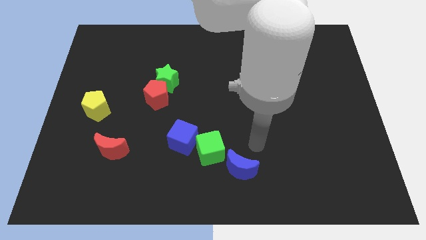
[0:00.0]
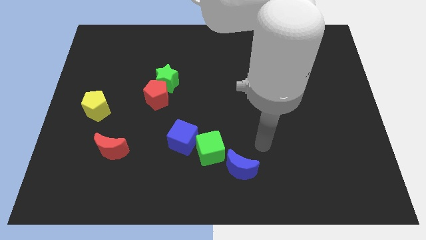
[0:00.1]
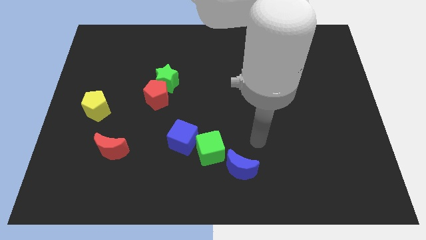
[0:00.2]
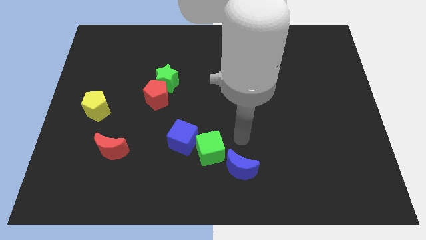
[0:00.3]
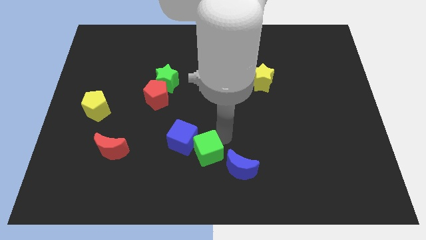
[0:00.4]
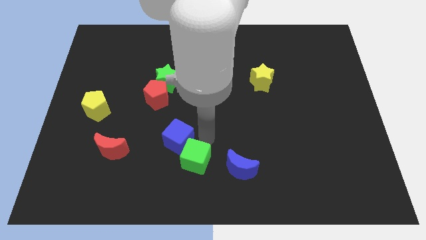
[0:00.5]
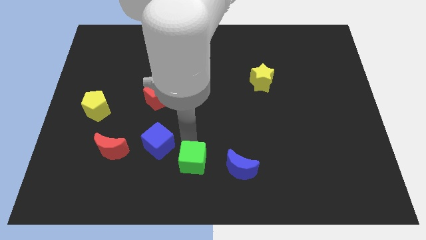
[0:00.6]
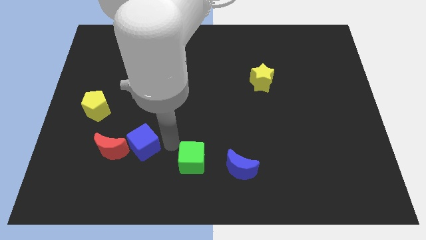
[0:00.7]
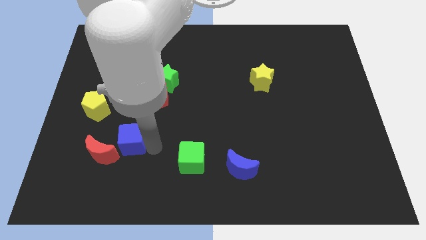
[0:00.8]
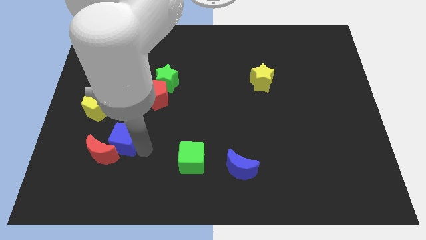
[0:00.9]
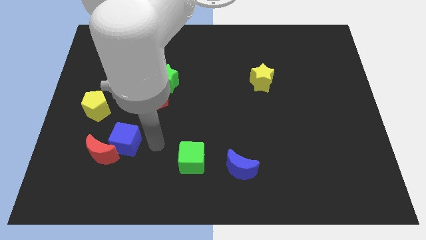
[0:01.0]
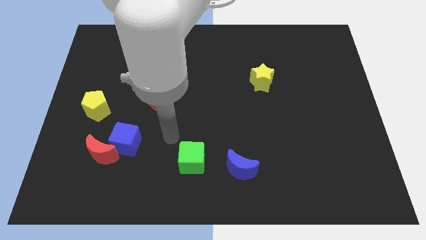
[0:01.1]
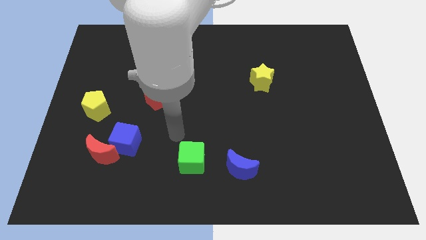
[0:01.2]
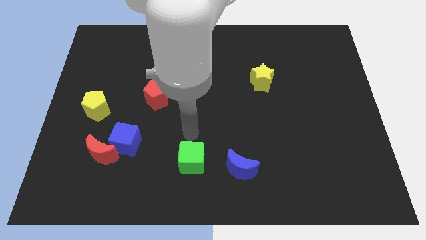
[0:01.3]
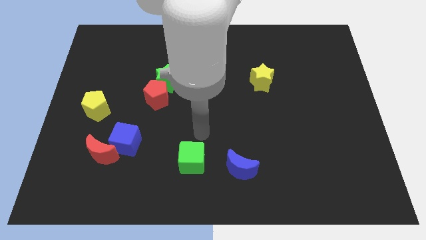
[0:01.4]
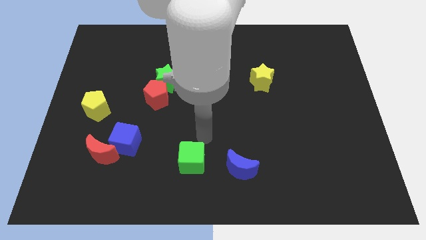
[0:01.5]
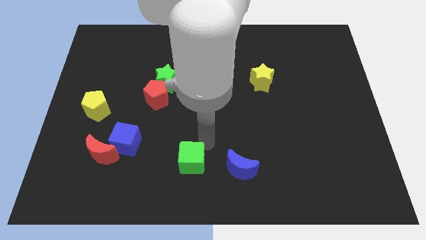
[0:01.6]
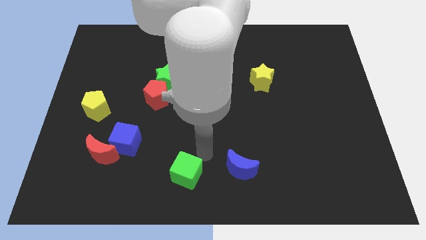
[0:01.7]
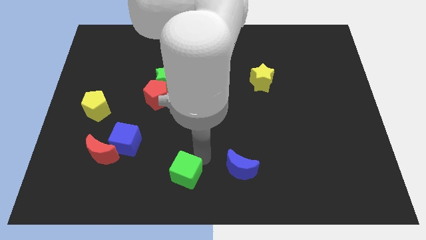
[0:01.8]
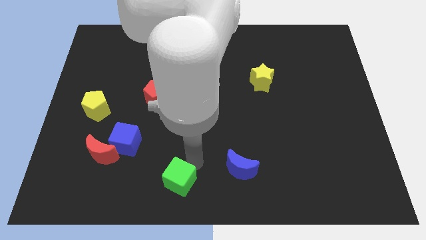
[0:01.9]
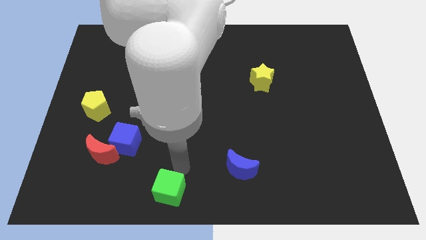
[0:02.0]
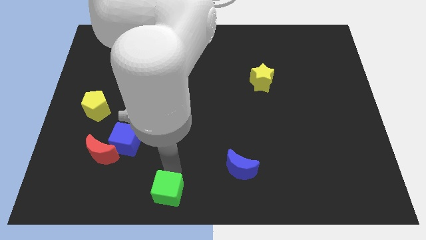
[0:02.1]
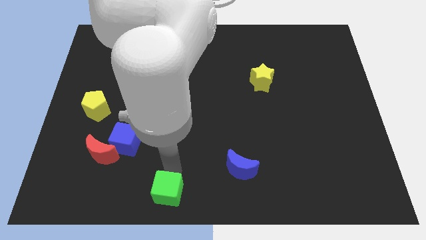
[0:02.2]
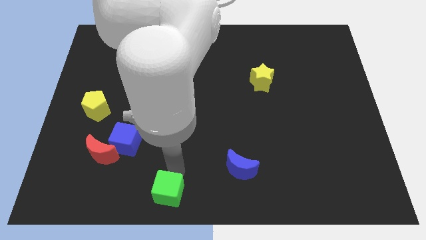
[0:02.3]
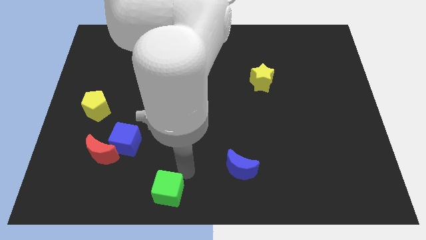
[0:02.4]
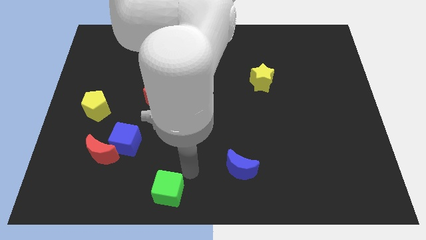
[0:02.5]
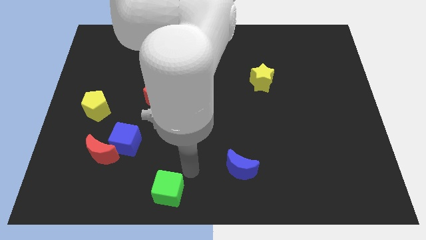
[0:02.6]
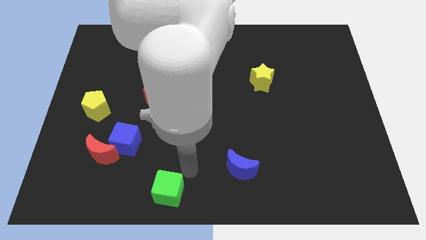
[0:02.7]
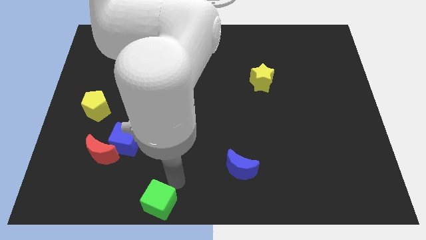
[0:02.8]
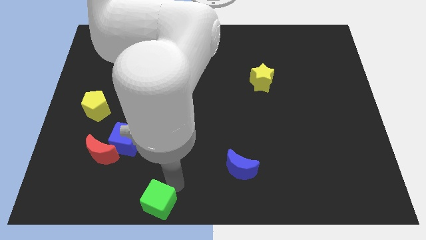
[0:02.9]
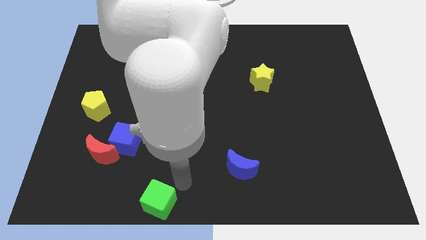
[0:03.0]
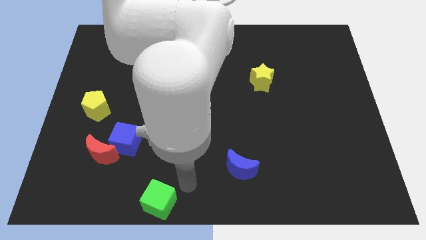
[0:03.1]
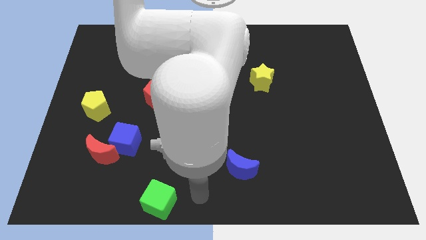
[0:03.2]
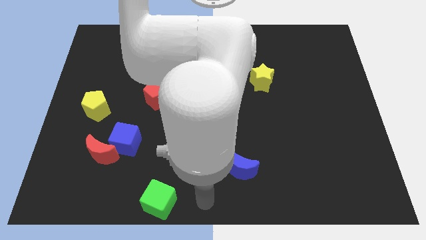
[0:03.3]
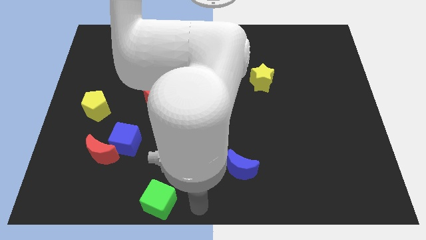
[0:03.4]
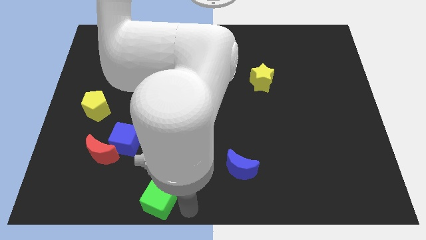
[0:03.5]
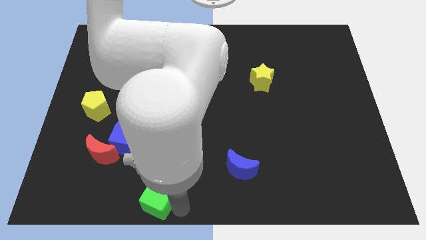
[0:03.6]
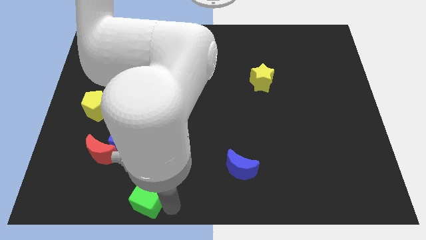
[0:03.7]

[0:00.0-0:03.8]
push the green cube away from the bottom center

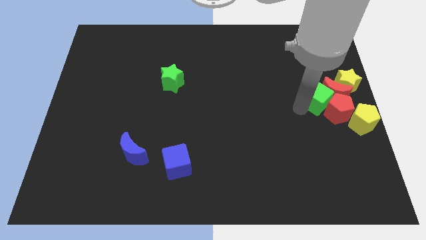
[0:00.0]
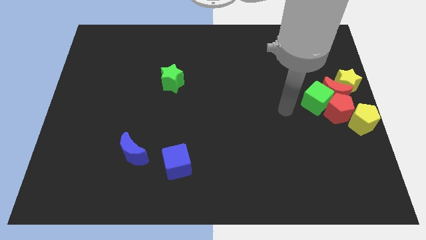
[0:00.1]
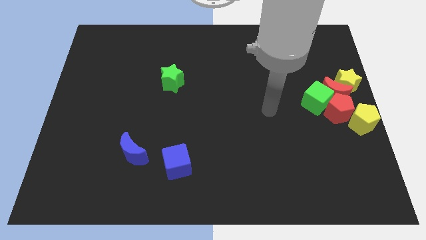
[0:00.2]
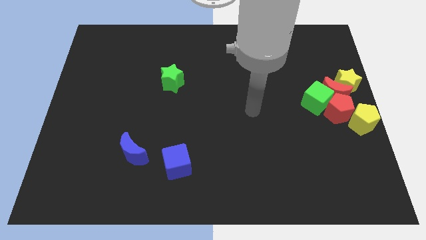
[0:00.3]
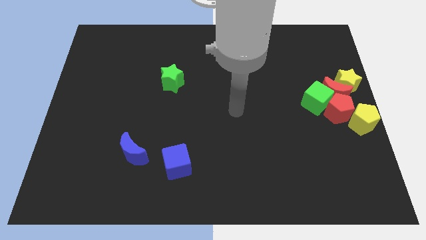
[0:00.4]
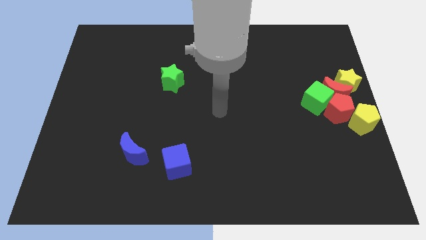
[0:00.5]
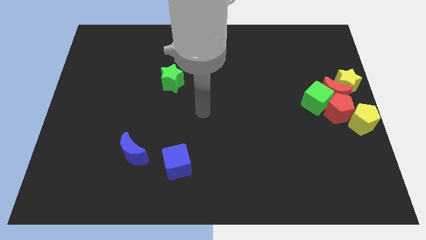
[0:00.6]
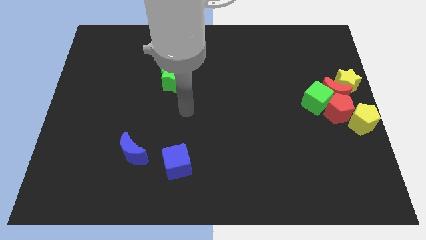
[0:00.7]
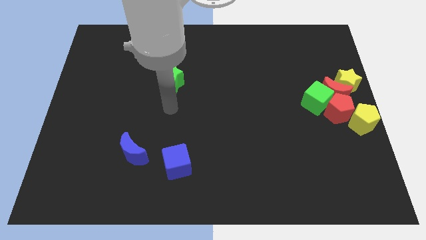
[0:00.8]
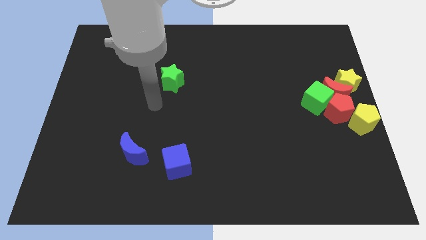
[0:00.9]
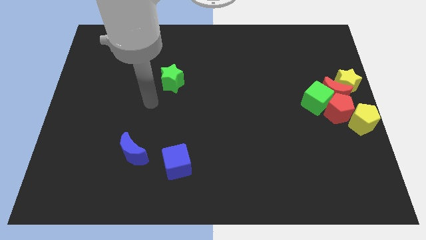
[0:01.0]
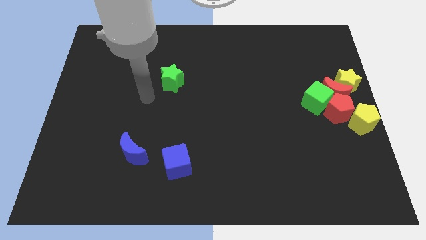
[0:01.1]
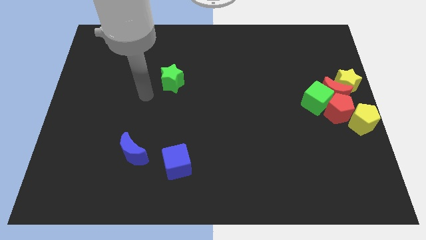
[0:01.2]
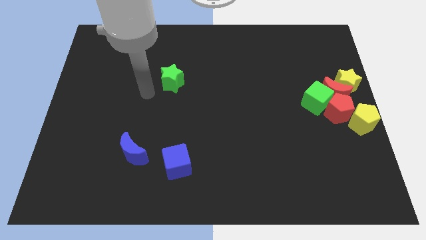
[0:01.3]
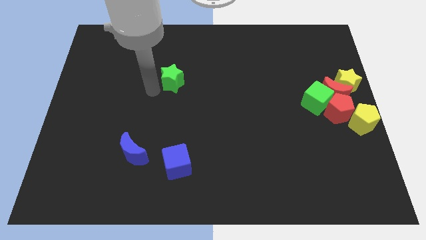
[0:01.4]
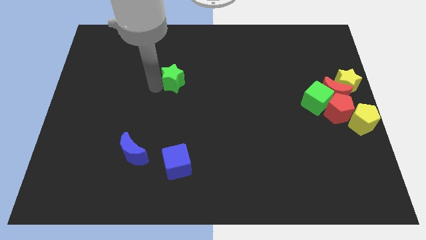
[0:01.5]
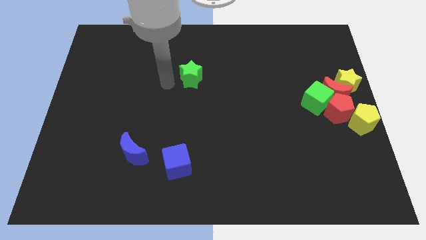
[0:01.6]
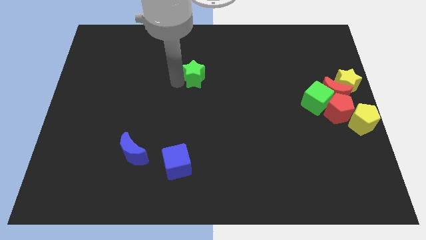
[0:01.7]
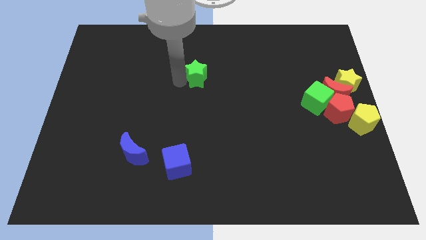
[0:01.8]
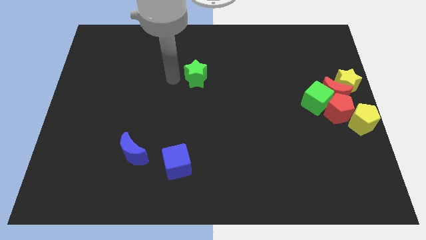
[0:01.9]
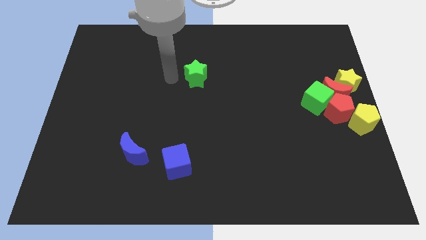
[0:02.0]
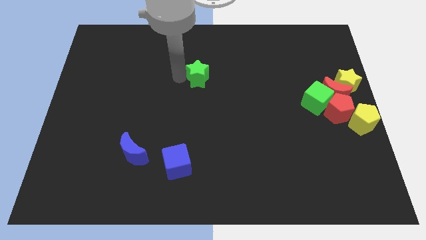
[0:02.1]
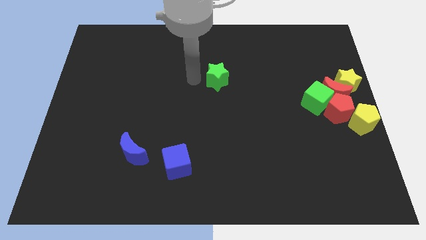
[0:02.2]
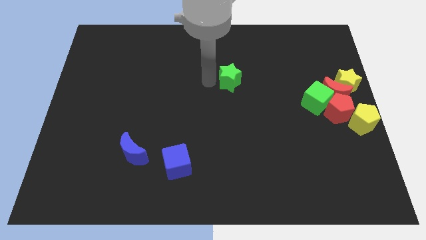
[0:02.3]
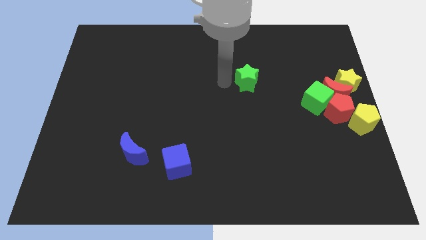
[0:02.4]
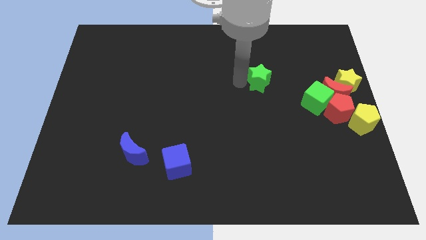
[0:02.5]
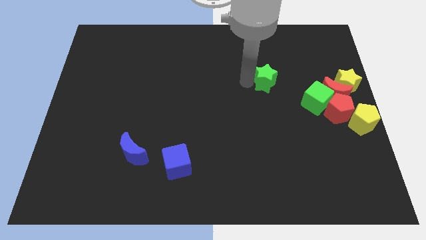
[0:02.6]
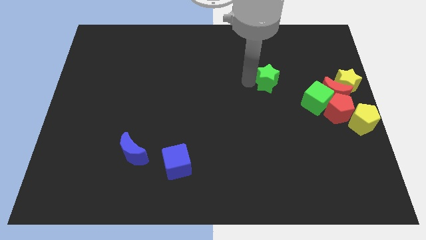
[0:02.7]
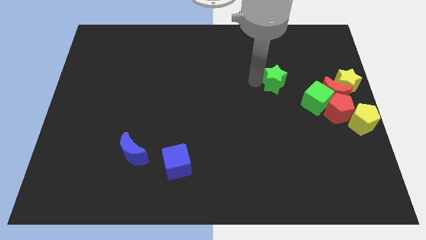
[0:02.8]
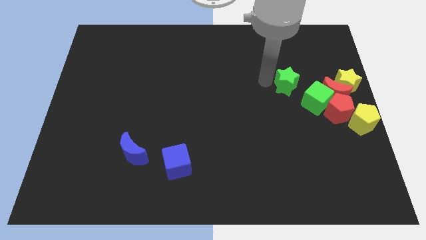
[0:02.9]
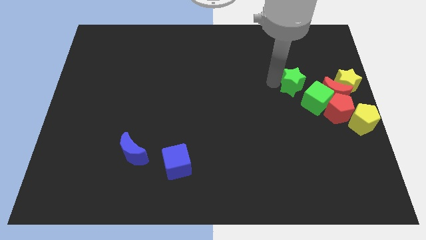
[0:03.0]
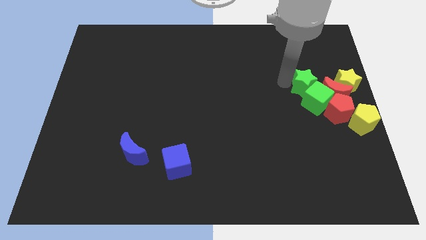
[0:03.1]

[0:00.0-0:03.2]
slide green star diagonally top right to the blue cube

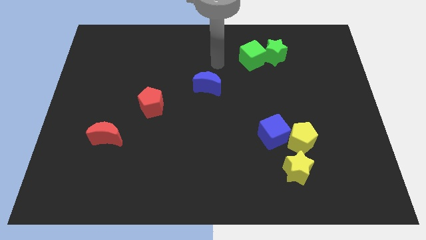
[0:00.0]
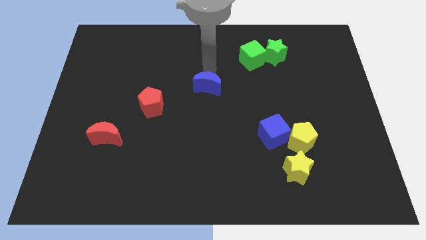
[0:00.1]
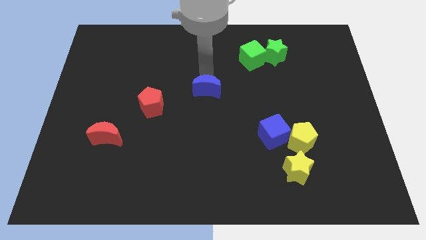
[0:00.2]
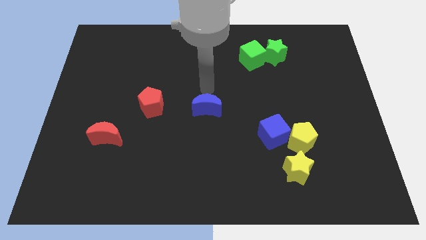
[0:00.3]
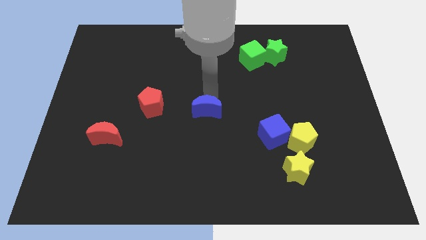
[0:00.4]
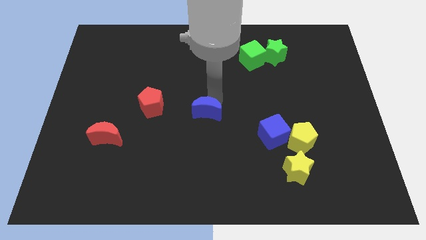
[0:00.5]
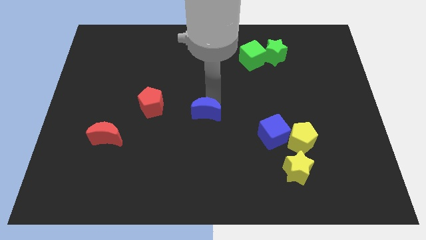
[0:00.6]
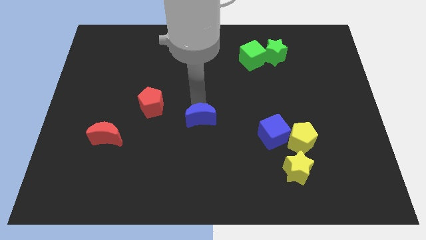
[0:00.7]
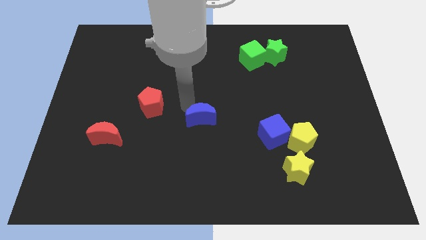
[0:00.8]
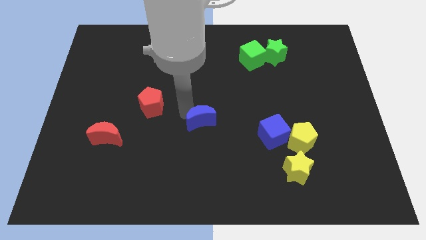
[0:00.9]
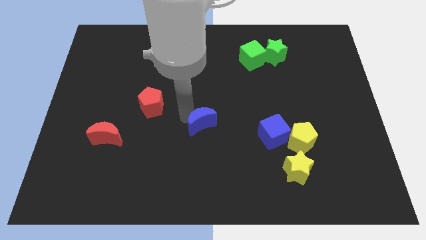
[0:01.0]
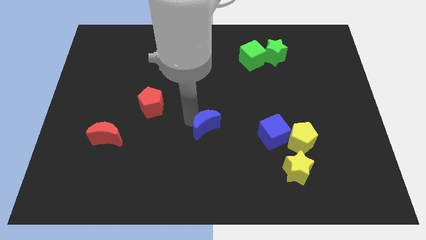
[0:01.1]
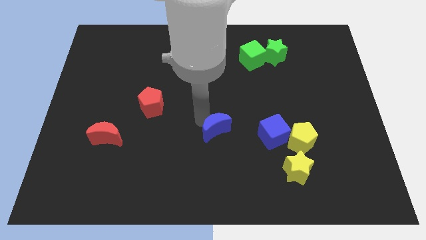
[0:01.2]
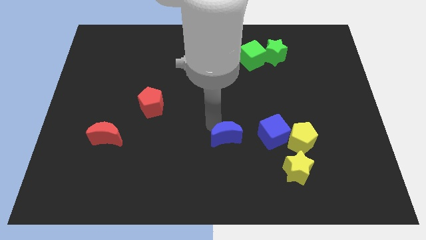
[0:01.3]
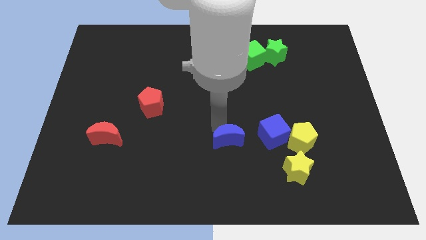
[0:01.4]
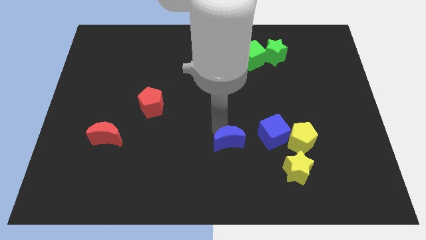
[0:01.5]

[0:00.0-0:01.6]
push the blue moon diagonally bottom right to the red pentagon

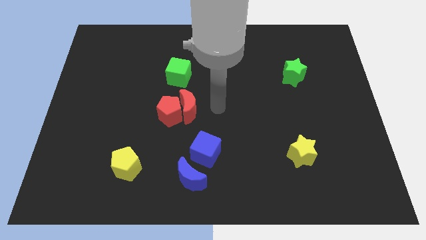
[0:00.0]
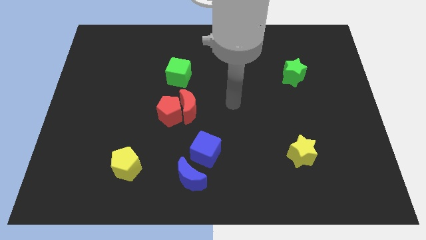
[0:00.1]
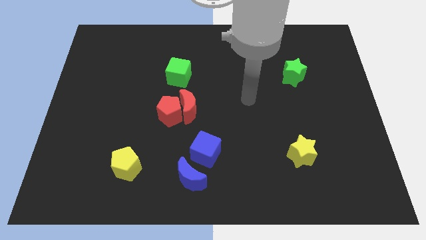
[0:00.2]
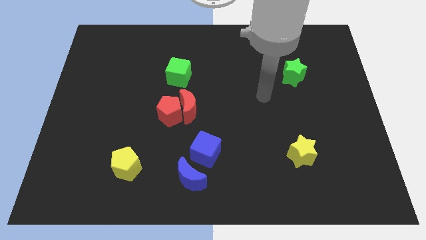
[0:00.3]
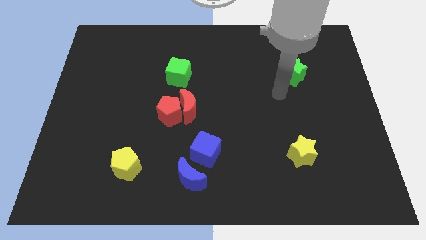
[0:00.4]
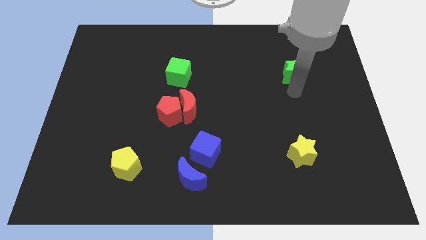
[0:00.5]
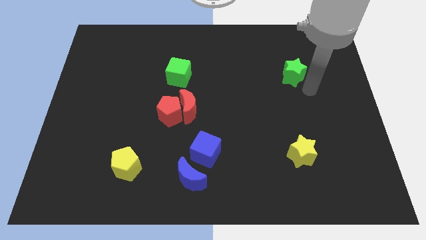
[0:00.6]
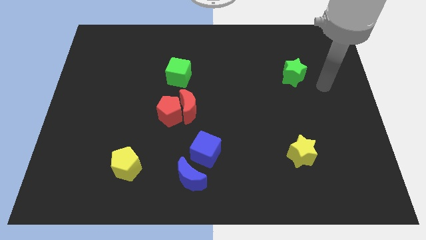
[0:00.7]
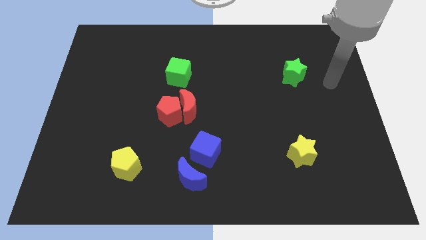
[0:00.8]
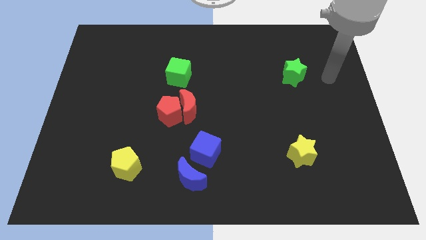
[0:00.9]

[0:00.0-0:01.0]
move your hand away from the group of red blocks
